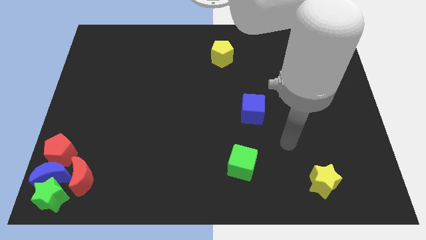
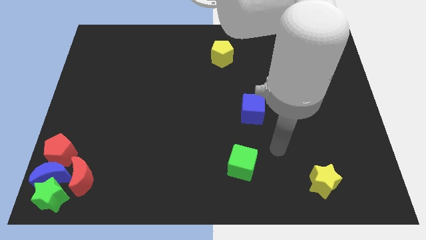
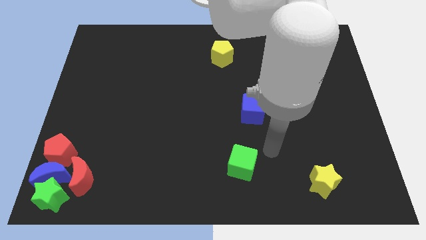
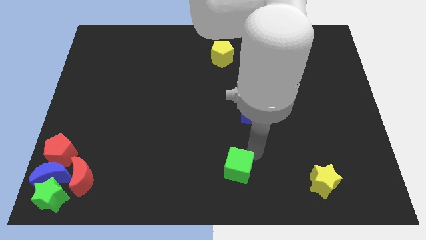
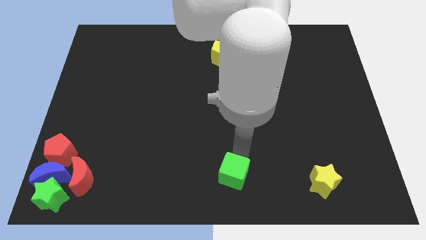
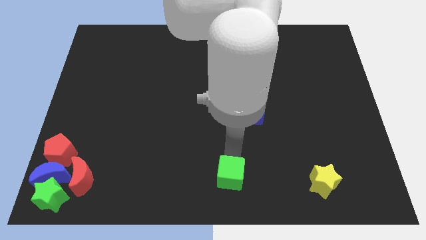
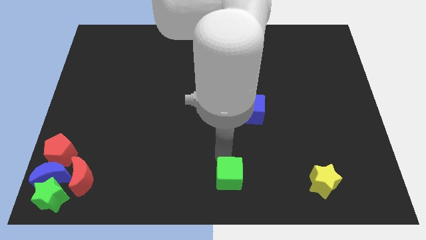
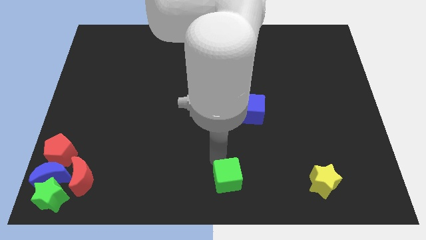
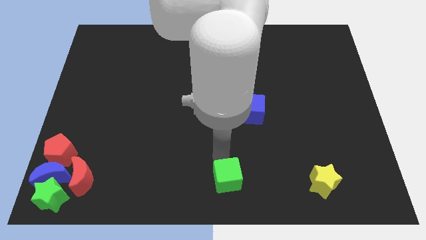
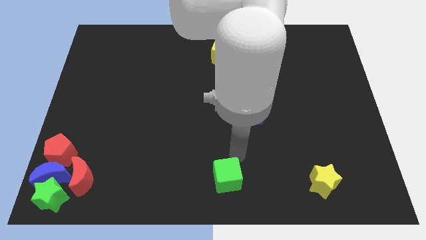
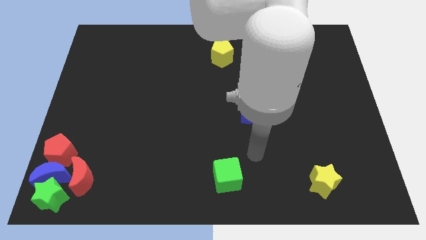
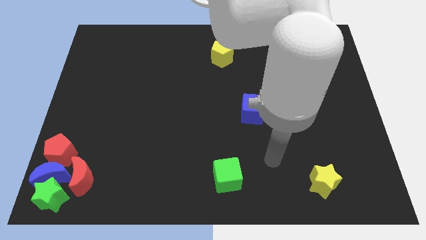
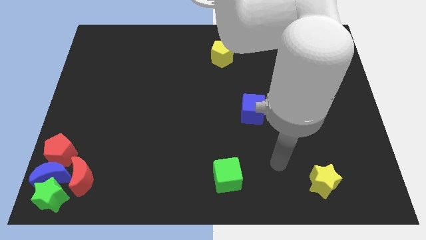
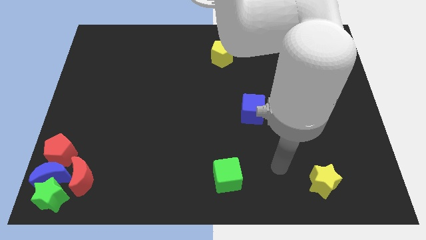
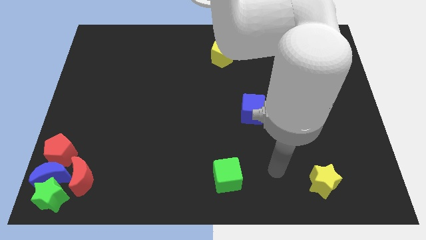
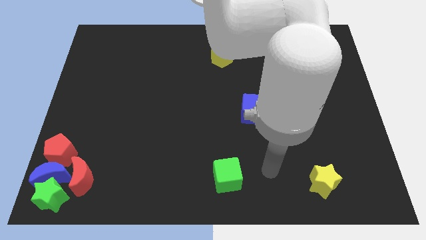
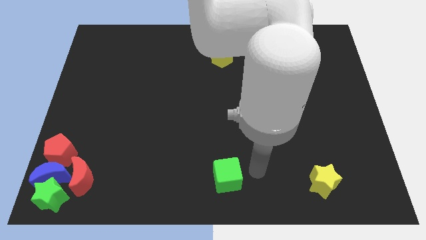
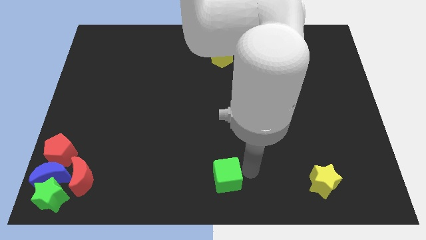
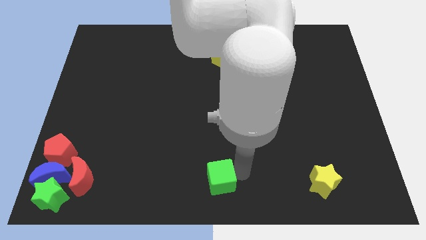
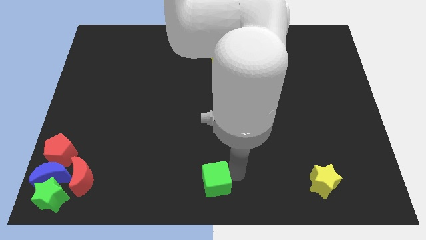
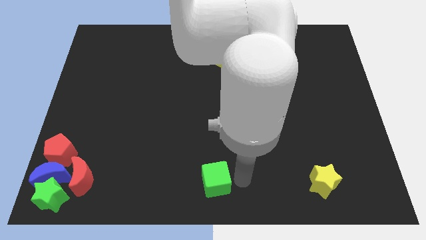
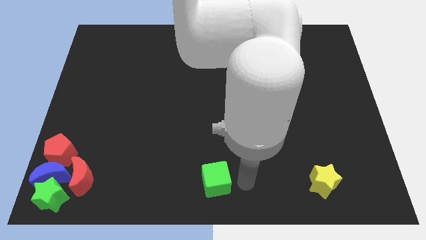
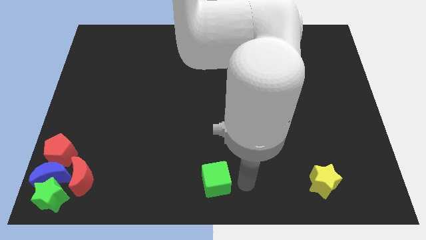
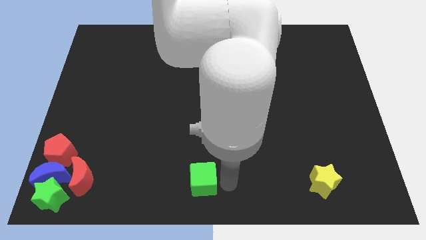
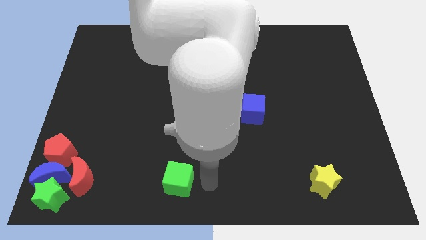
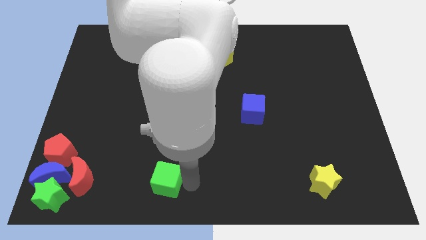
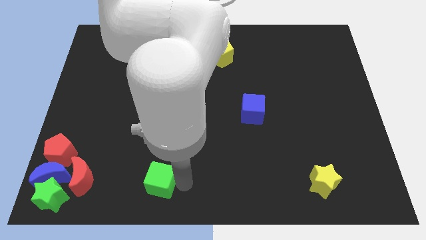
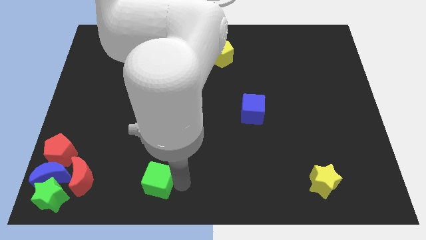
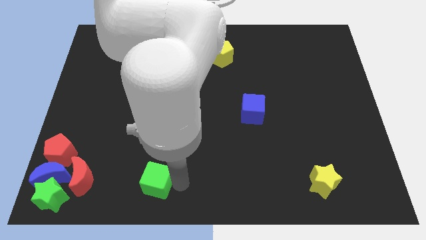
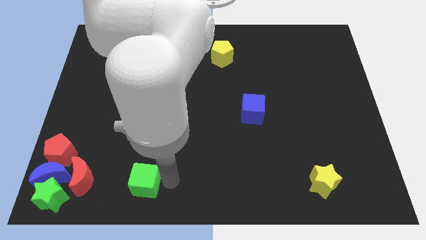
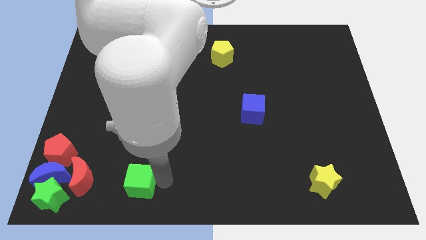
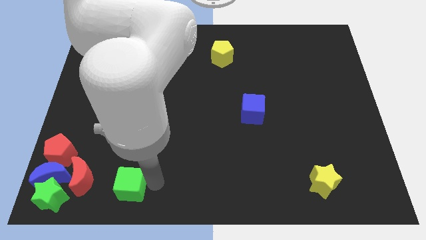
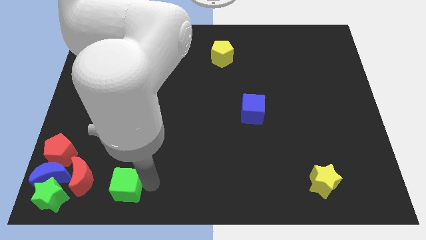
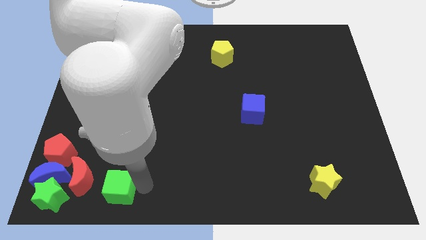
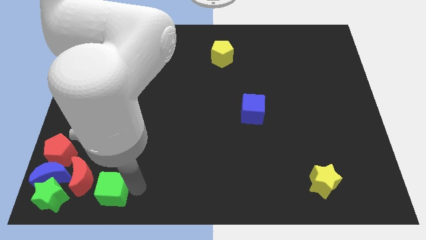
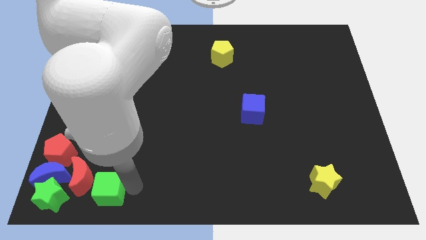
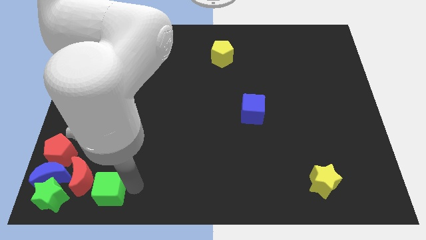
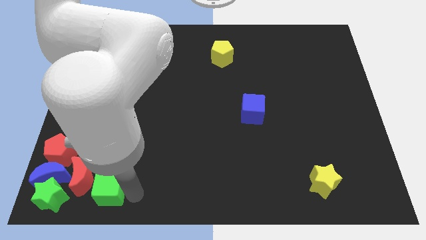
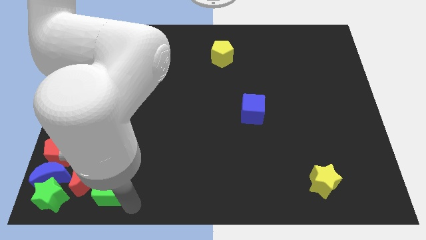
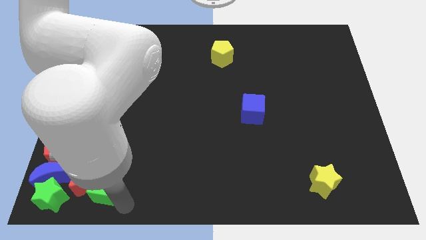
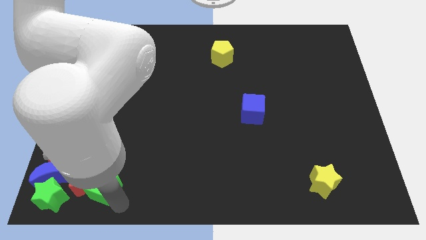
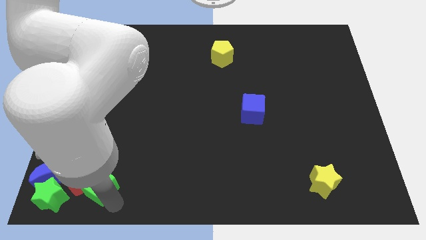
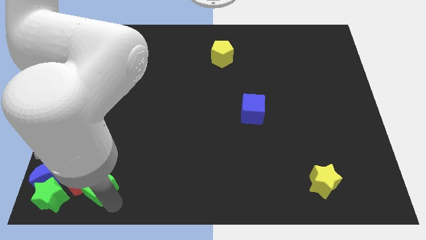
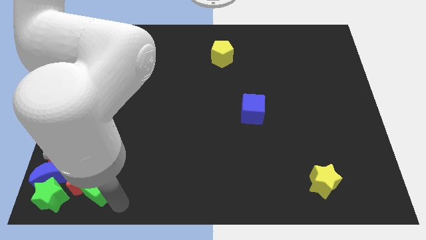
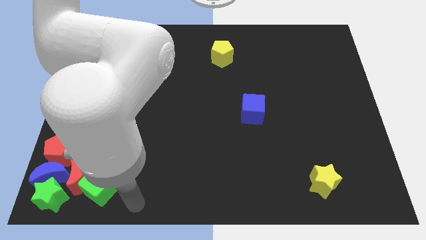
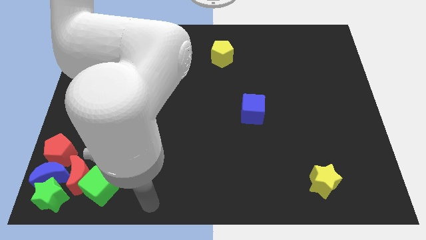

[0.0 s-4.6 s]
move green cube right to red crescent

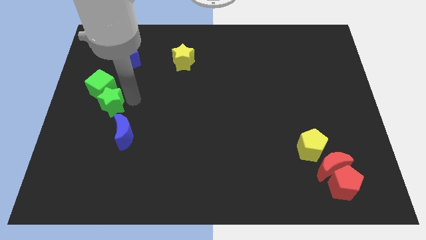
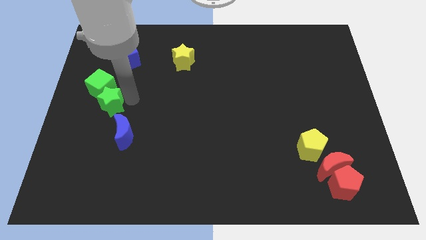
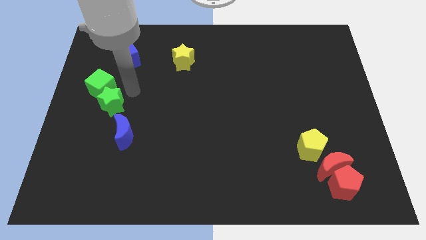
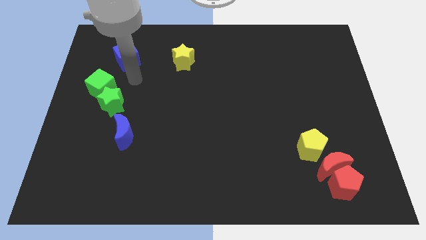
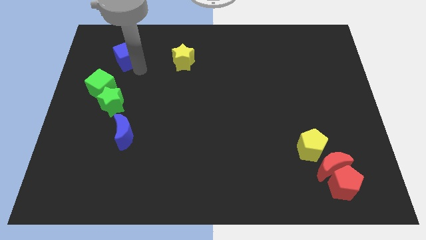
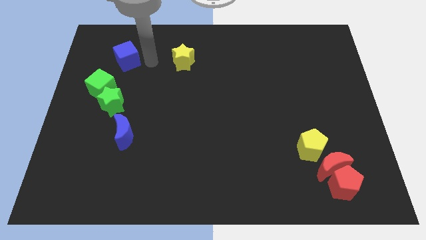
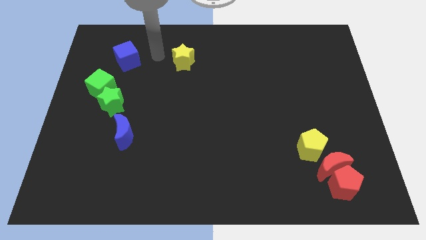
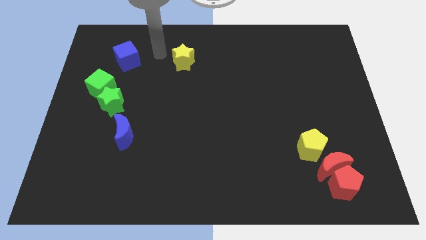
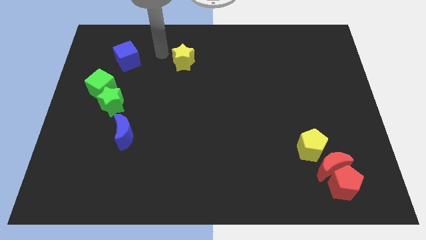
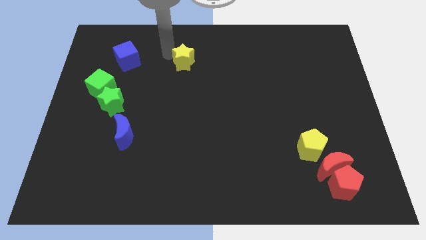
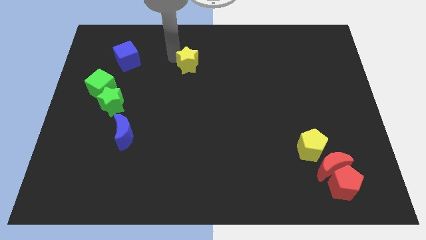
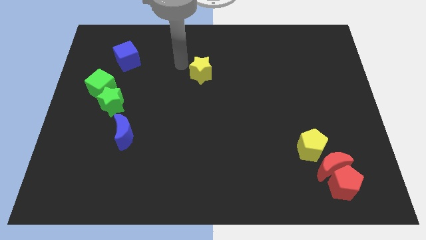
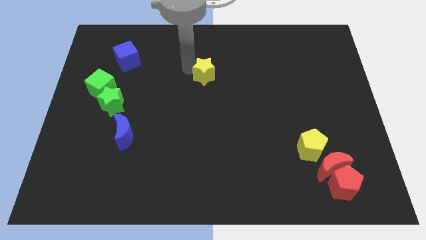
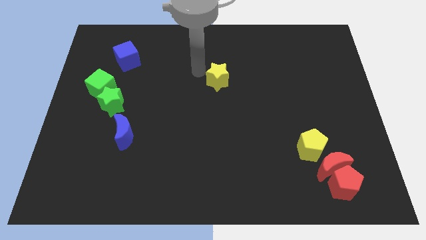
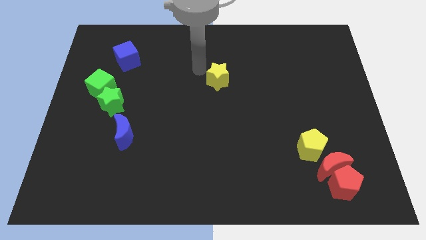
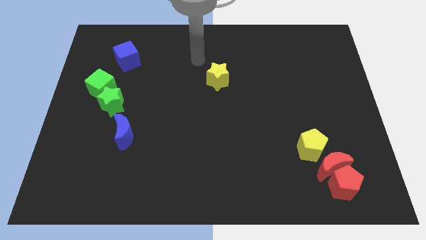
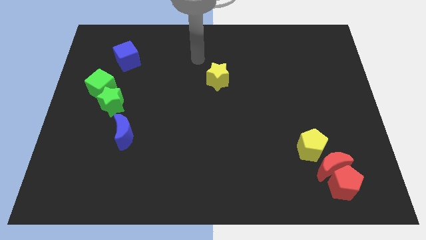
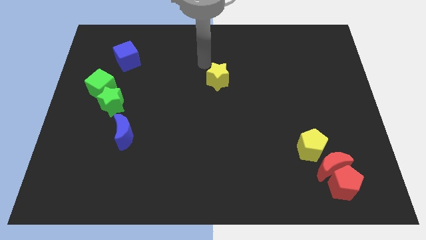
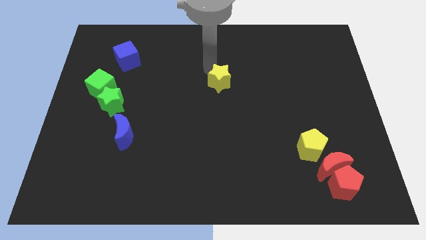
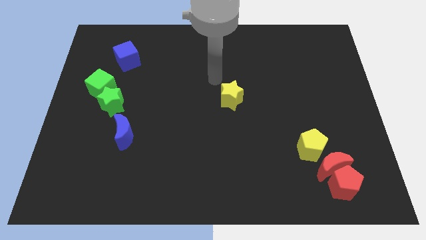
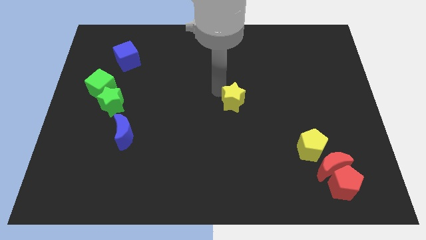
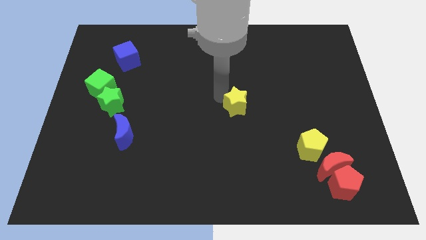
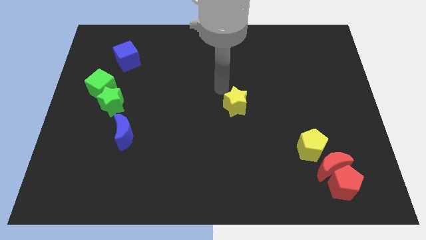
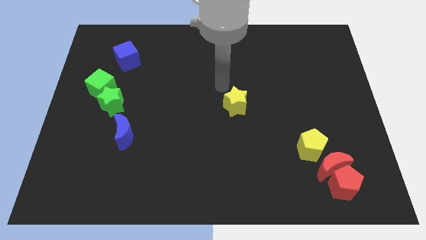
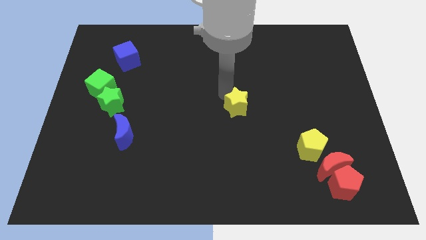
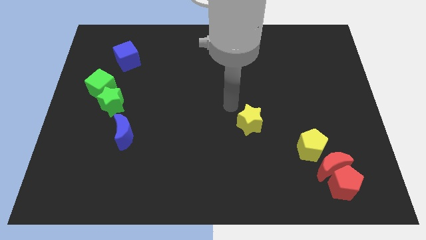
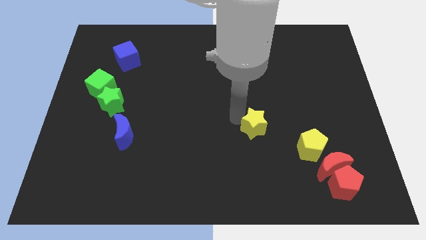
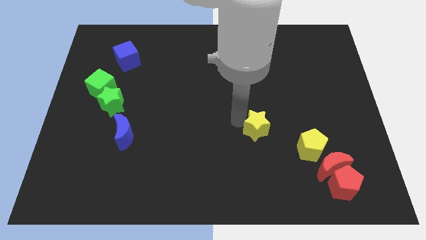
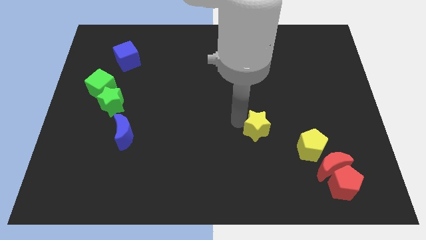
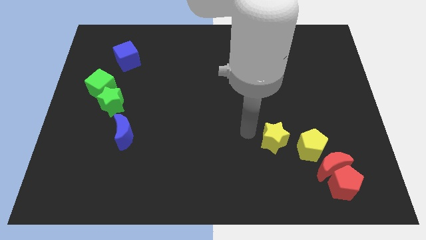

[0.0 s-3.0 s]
place the yellow star parallel right to the blue crescent

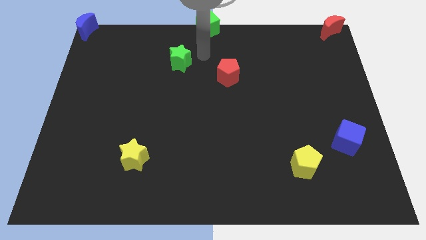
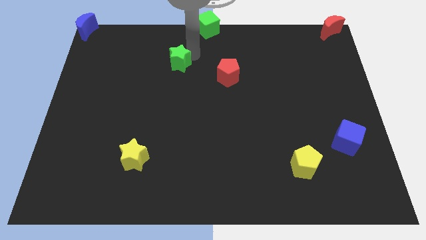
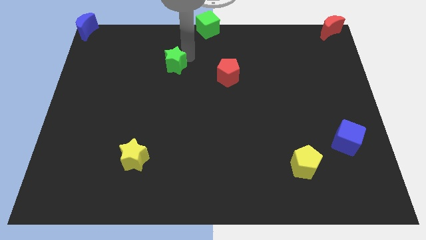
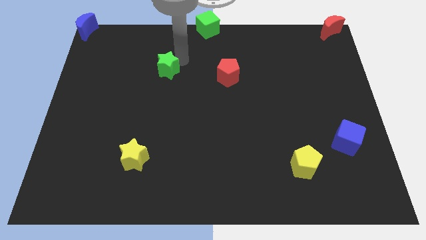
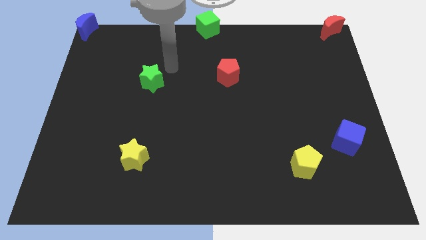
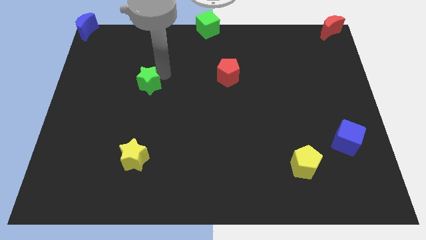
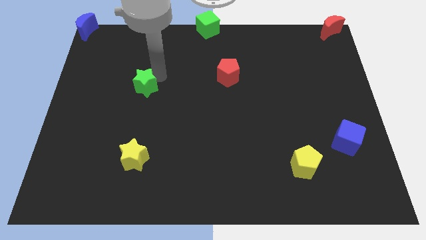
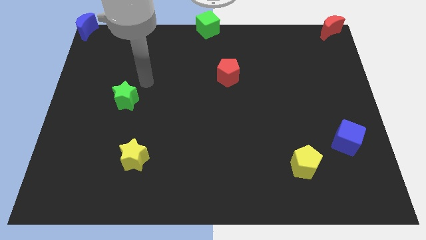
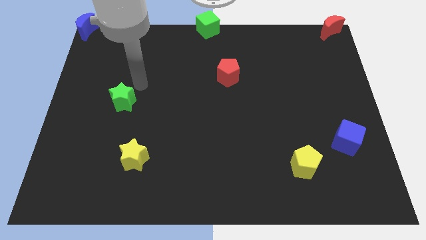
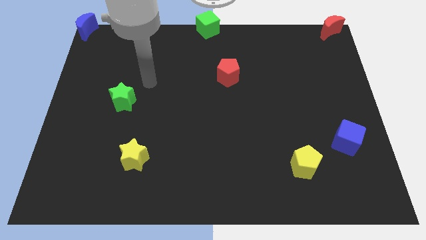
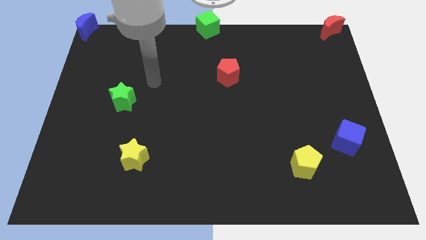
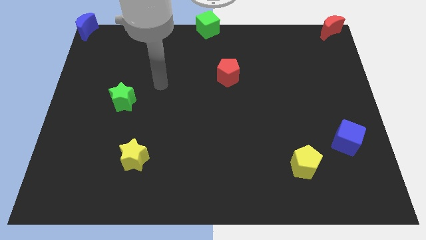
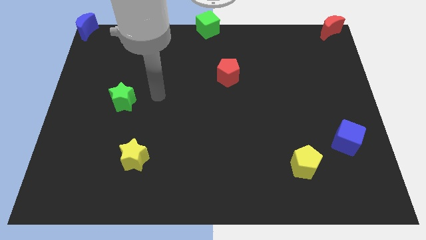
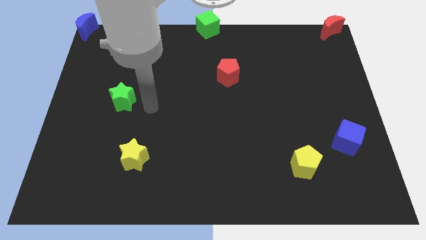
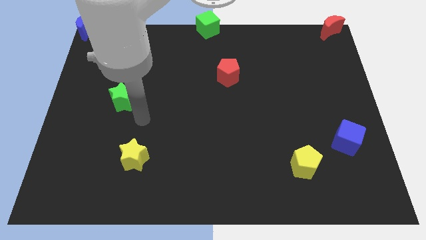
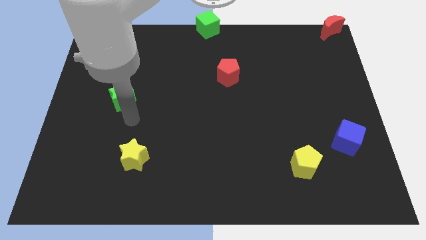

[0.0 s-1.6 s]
push the green star diagonally to the top left of the yellow star
